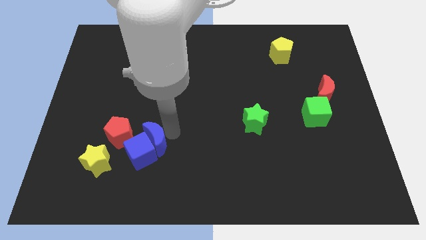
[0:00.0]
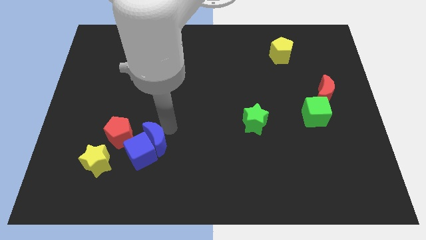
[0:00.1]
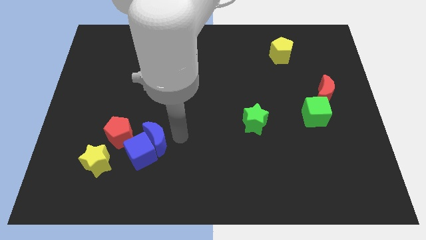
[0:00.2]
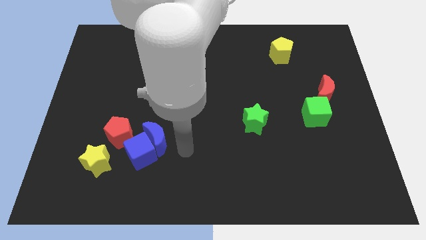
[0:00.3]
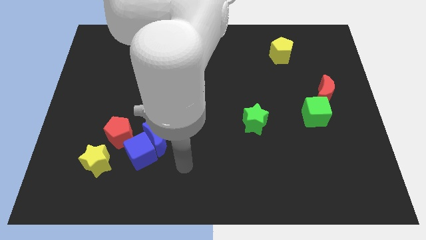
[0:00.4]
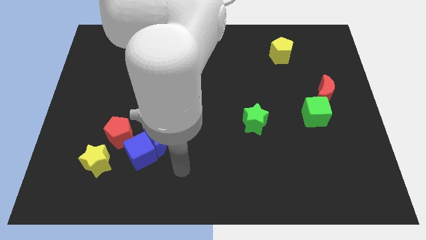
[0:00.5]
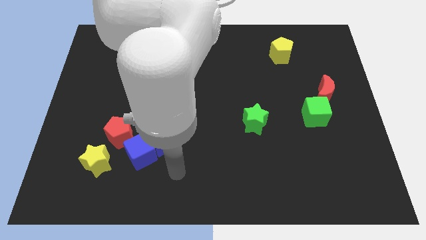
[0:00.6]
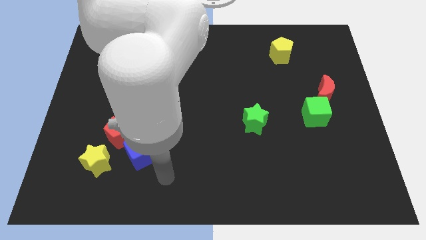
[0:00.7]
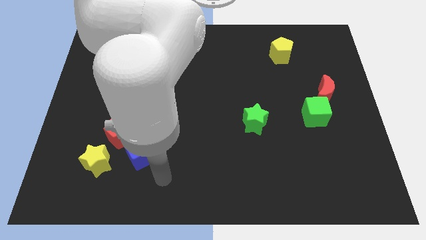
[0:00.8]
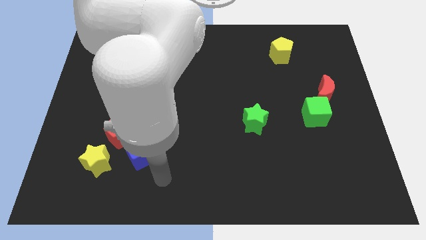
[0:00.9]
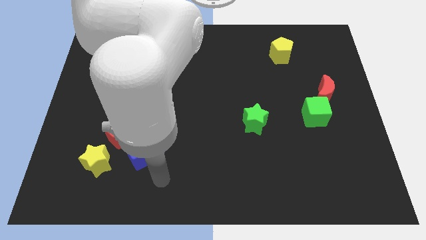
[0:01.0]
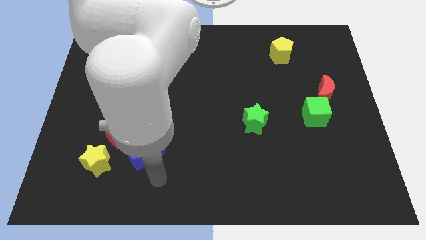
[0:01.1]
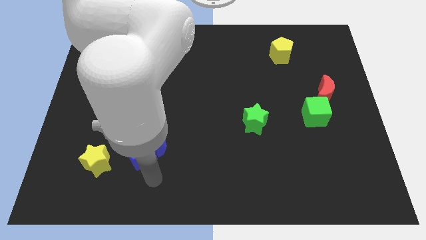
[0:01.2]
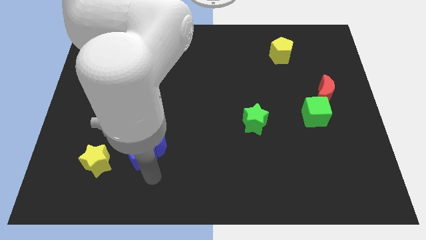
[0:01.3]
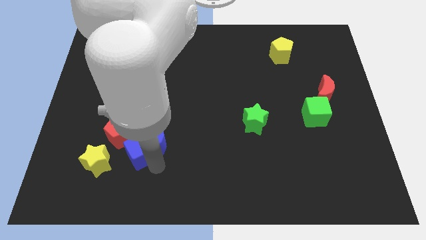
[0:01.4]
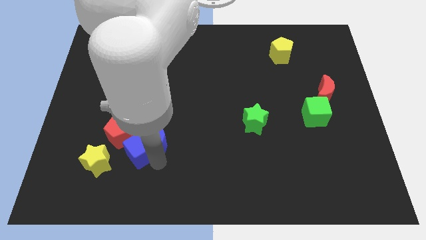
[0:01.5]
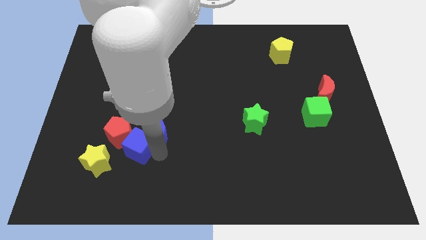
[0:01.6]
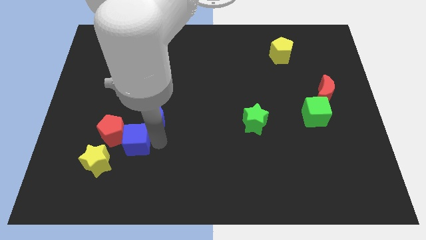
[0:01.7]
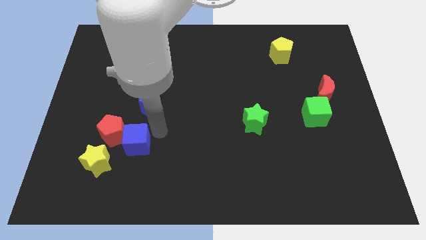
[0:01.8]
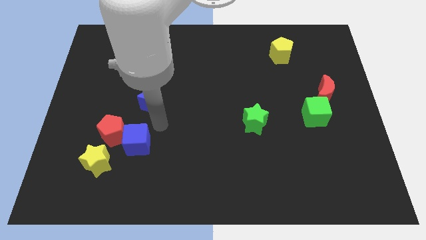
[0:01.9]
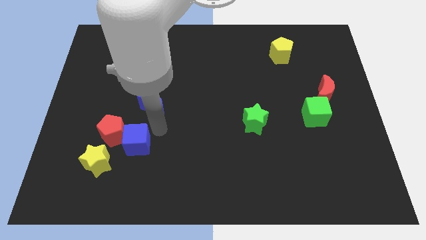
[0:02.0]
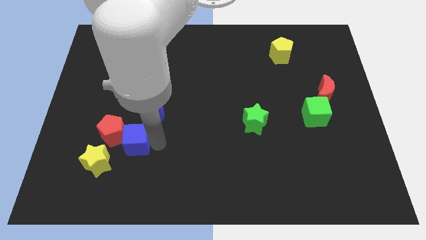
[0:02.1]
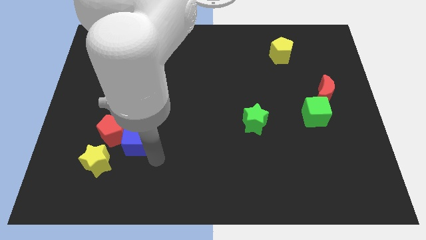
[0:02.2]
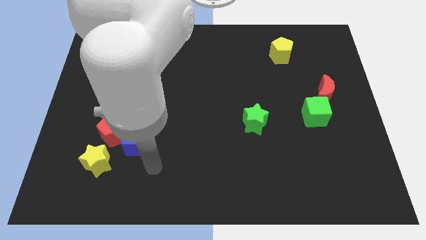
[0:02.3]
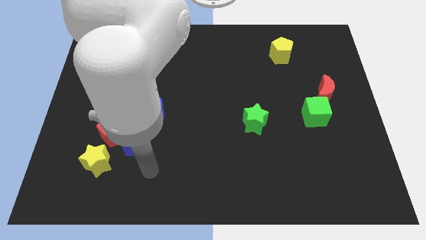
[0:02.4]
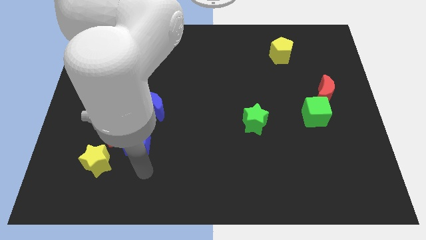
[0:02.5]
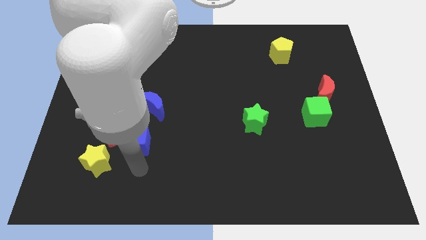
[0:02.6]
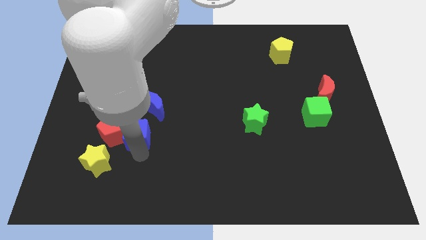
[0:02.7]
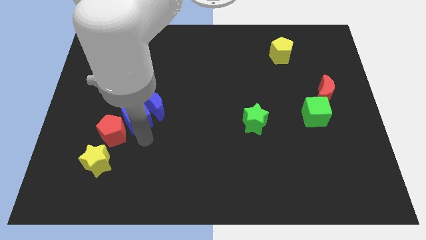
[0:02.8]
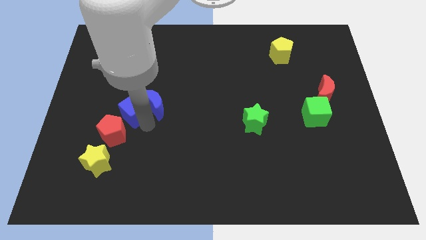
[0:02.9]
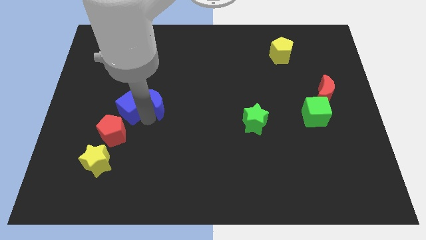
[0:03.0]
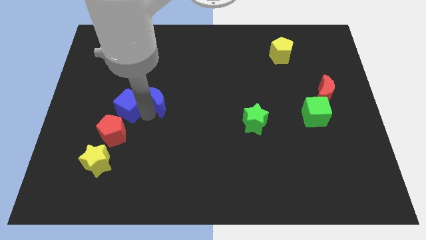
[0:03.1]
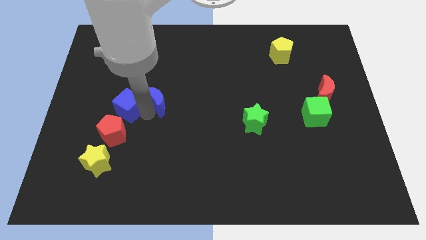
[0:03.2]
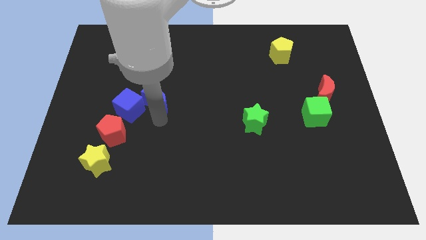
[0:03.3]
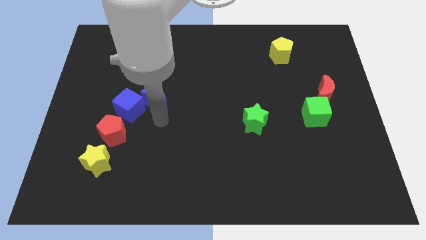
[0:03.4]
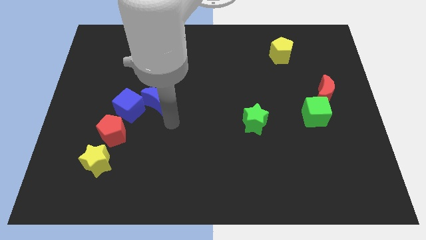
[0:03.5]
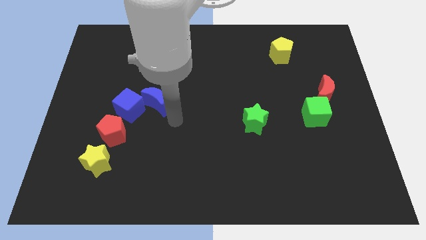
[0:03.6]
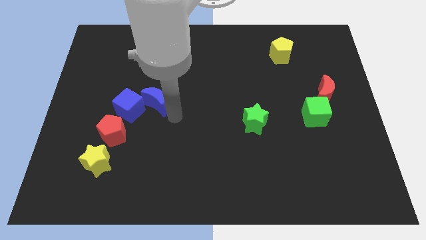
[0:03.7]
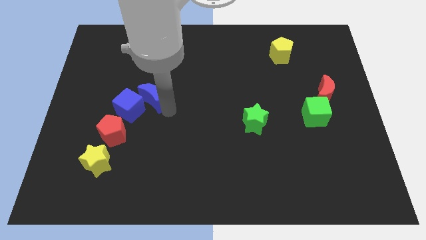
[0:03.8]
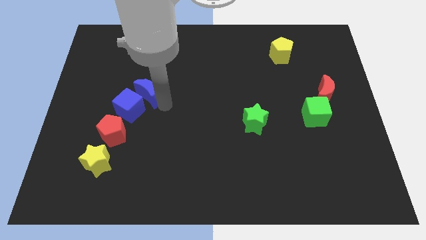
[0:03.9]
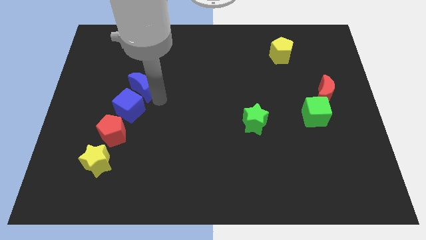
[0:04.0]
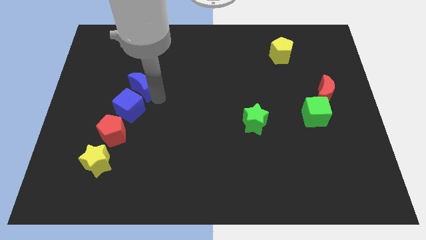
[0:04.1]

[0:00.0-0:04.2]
place the blue moon and blue cube diagonally to the red pentagon

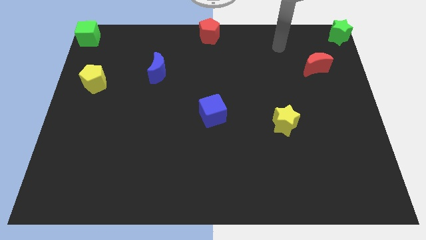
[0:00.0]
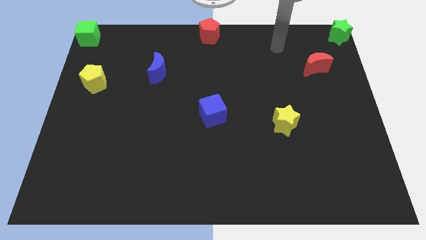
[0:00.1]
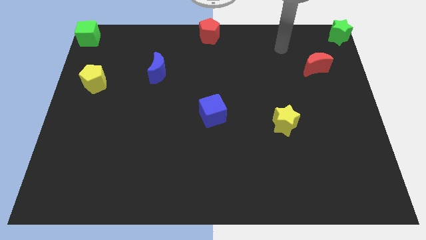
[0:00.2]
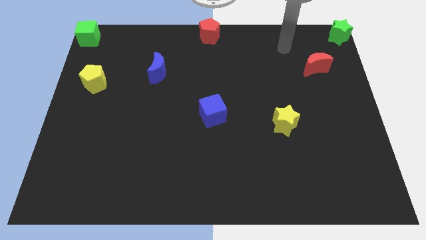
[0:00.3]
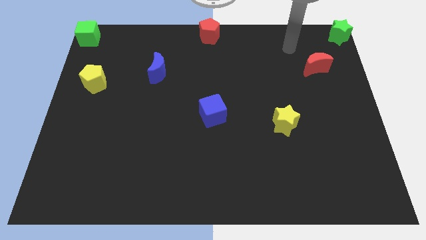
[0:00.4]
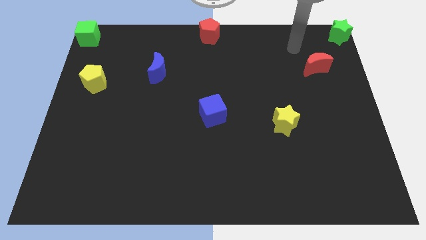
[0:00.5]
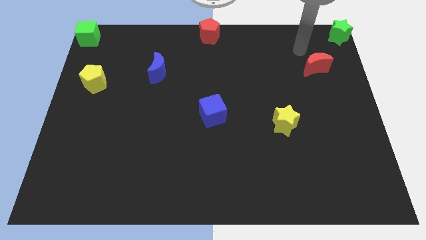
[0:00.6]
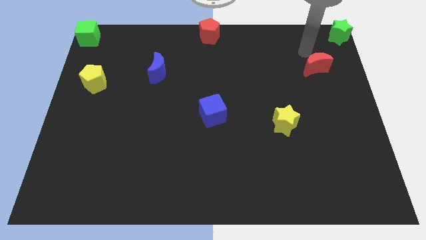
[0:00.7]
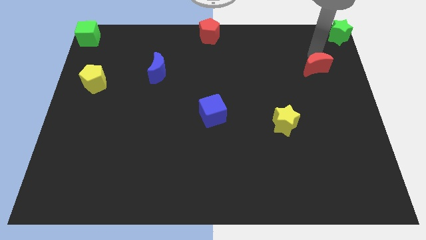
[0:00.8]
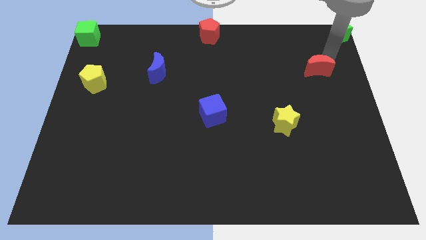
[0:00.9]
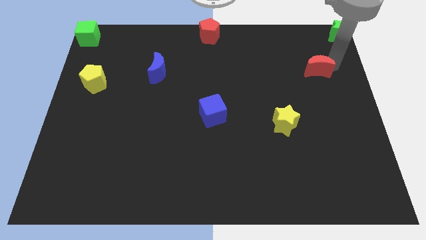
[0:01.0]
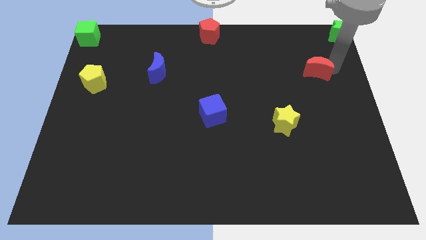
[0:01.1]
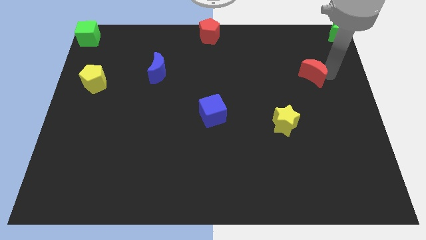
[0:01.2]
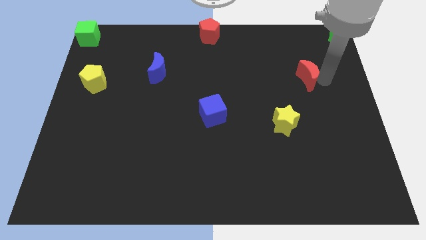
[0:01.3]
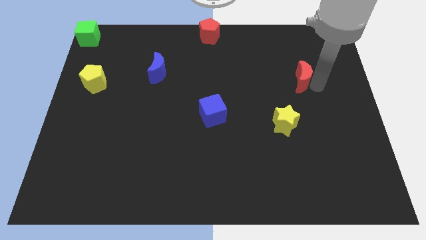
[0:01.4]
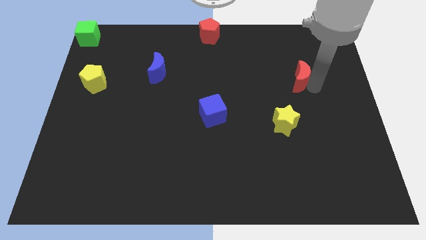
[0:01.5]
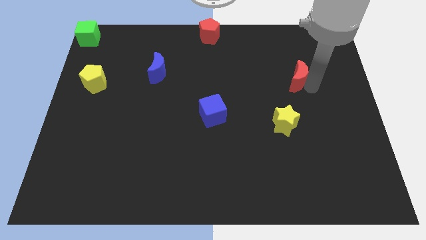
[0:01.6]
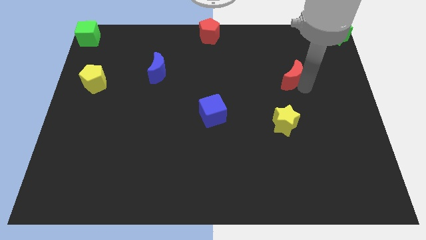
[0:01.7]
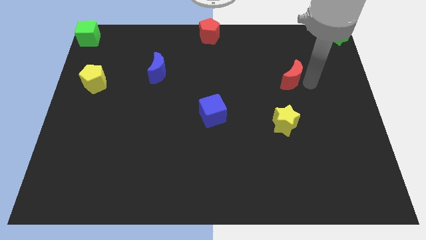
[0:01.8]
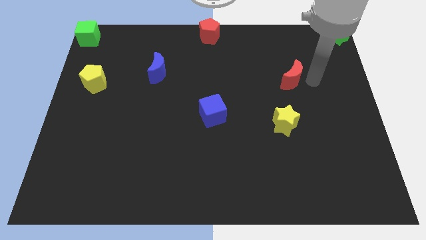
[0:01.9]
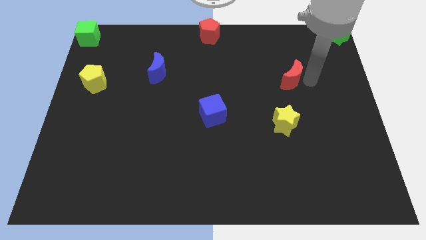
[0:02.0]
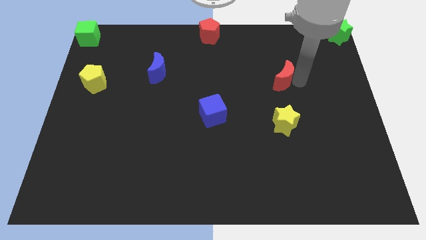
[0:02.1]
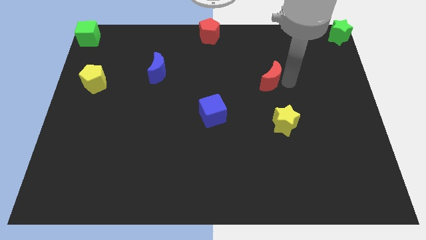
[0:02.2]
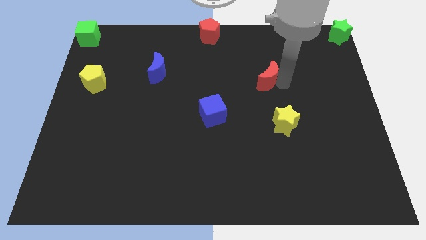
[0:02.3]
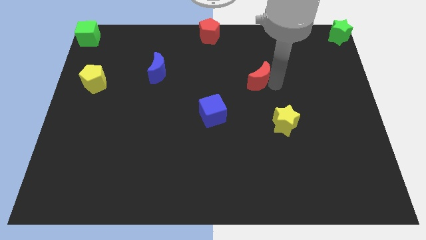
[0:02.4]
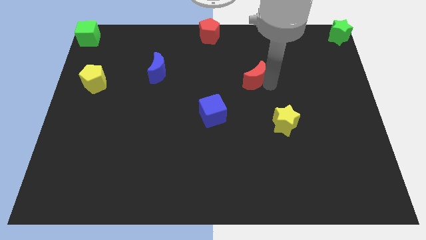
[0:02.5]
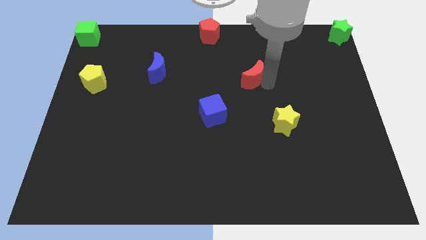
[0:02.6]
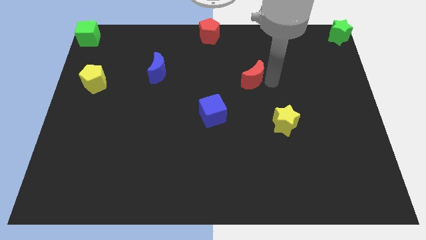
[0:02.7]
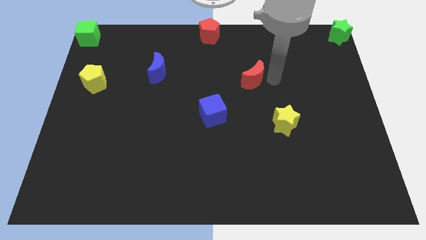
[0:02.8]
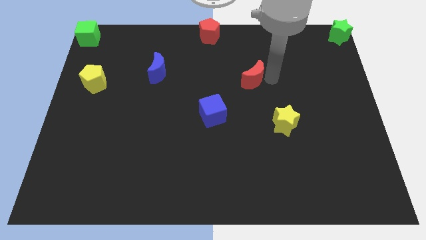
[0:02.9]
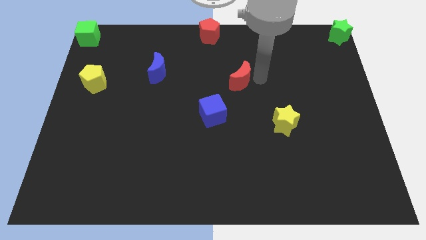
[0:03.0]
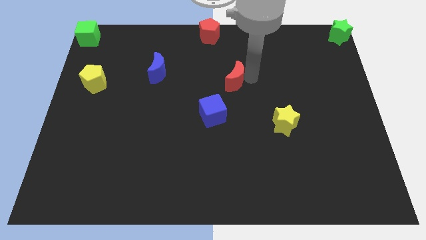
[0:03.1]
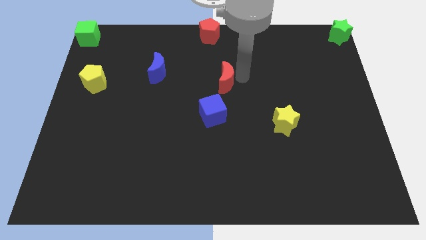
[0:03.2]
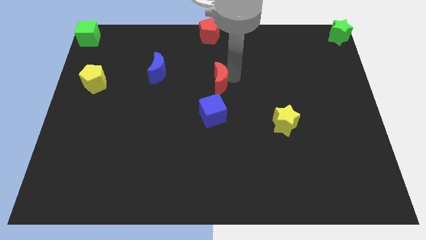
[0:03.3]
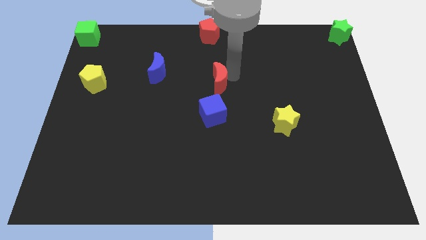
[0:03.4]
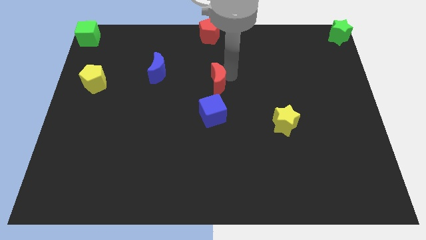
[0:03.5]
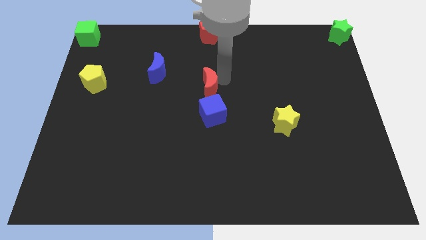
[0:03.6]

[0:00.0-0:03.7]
drag the red crescent to the top side of the blue cube

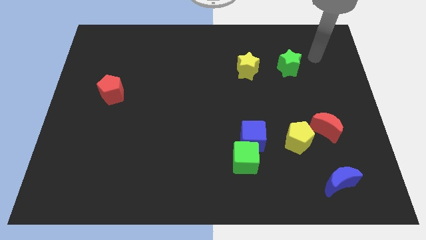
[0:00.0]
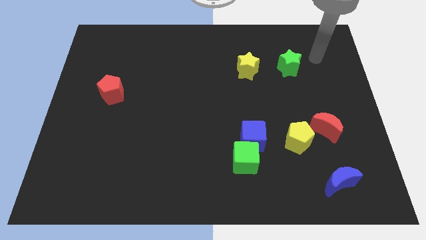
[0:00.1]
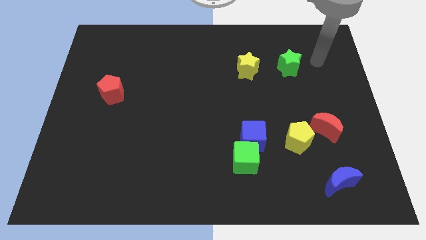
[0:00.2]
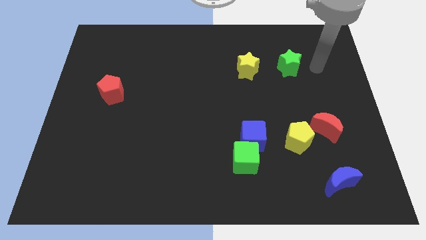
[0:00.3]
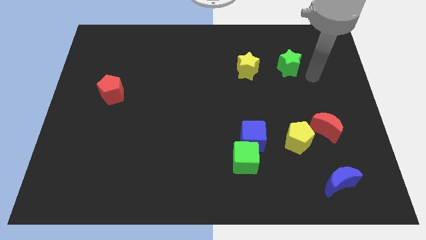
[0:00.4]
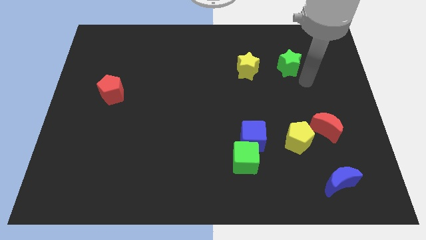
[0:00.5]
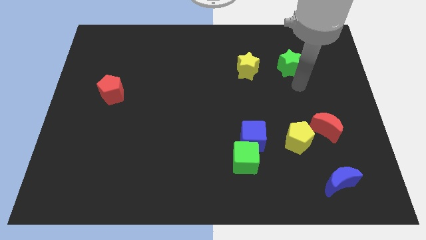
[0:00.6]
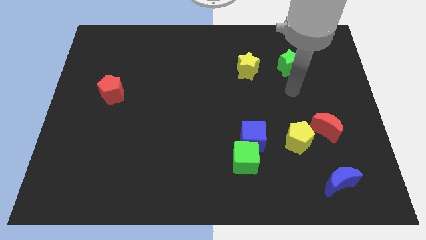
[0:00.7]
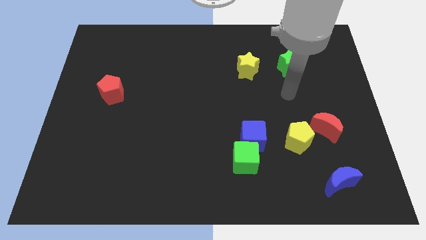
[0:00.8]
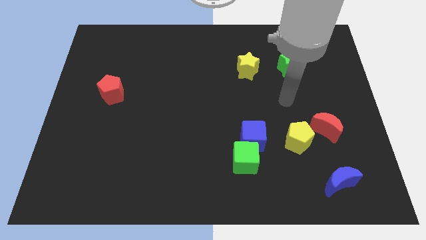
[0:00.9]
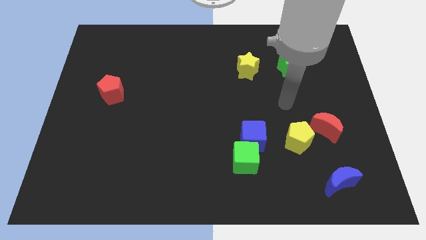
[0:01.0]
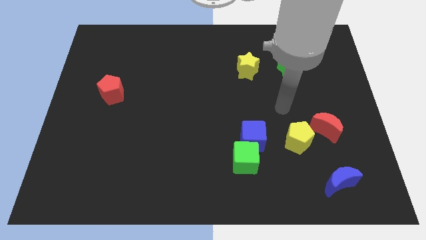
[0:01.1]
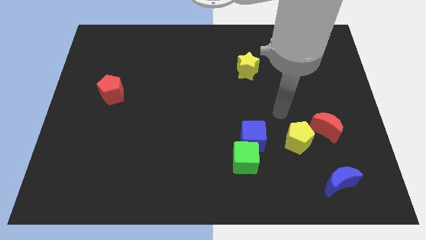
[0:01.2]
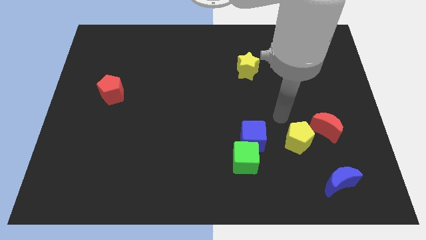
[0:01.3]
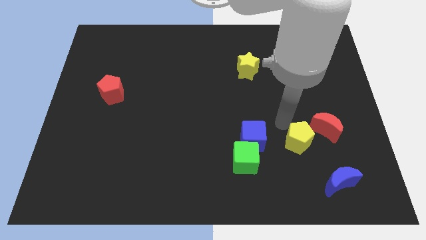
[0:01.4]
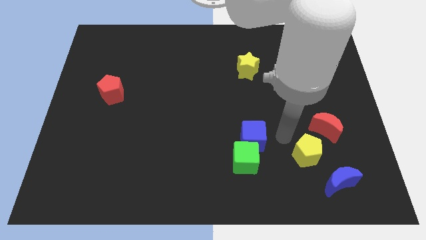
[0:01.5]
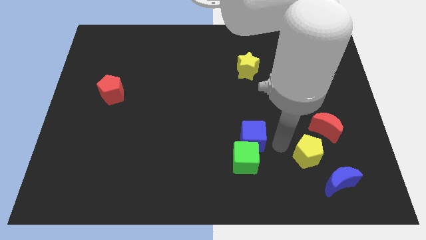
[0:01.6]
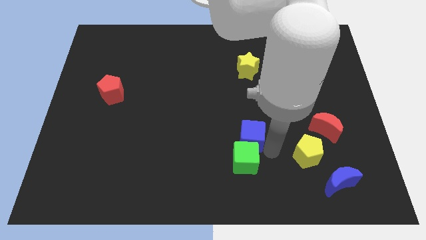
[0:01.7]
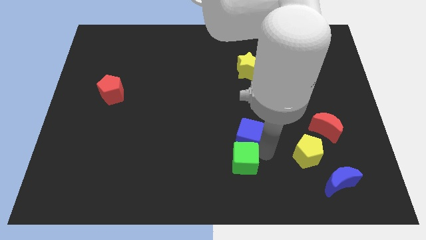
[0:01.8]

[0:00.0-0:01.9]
place your arm to the right of green cube
